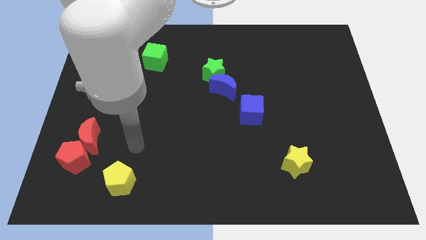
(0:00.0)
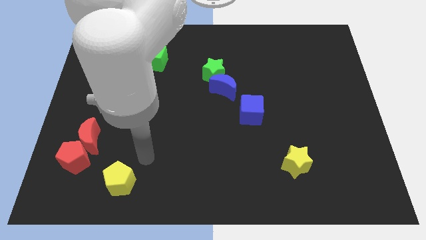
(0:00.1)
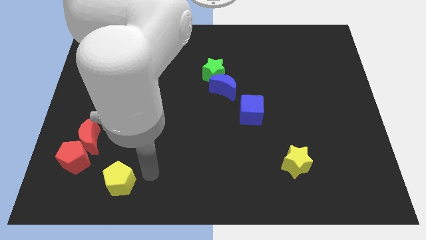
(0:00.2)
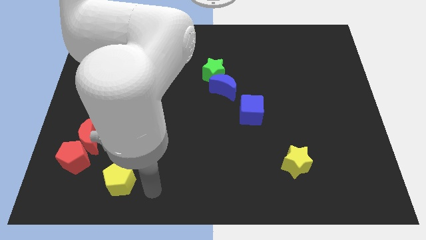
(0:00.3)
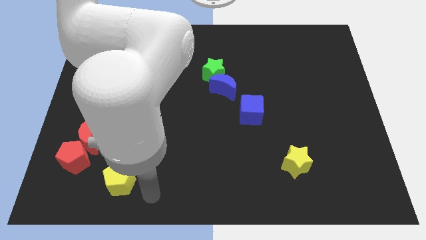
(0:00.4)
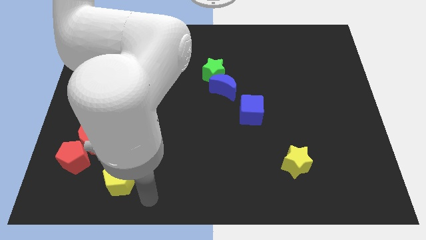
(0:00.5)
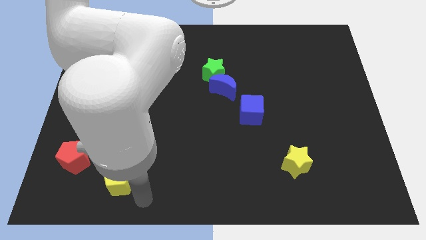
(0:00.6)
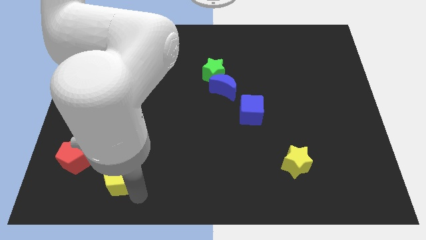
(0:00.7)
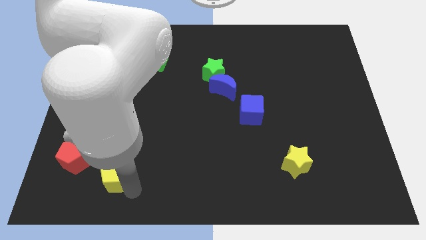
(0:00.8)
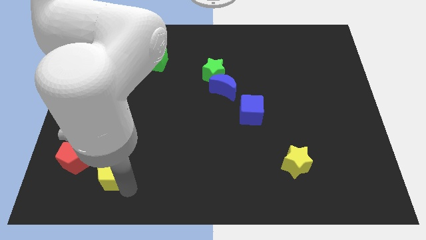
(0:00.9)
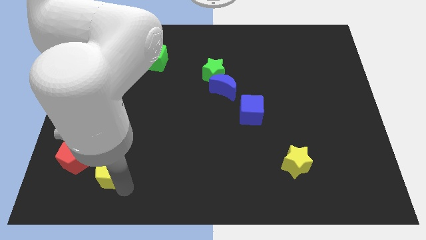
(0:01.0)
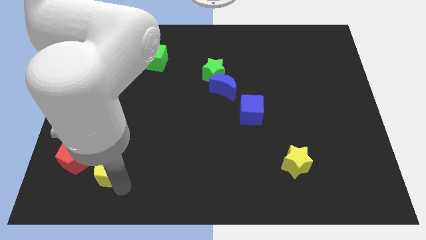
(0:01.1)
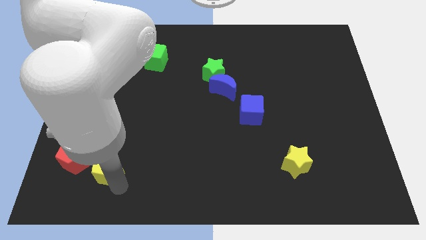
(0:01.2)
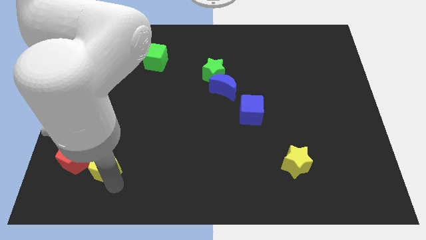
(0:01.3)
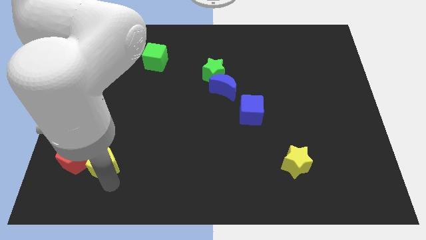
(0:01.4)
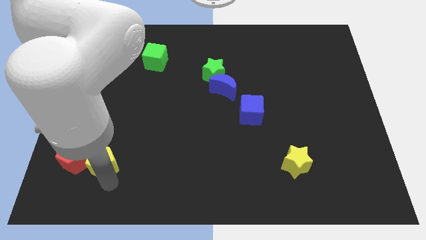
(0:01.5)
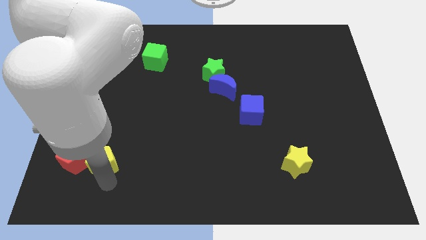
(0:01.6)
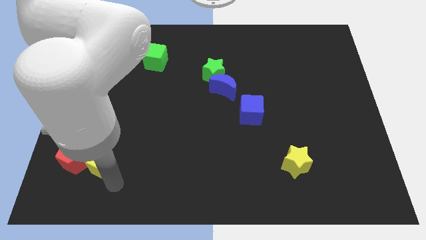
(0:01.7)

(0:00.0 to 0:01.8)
place the yellow pentagon right to the red pentagon

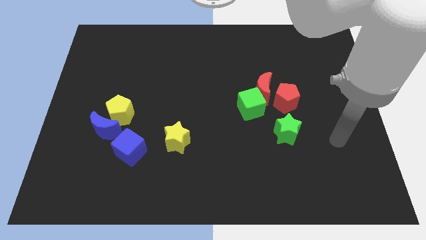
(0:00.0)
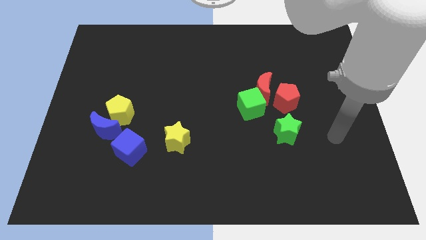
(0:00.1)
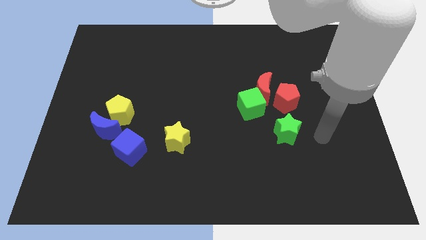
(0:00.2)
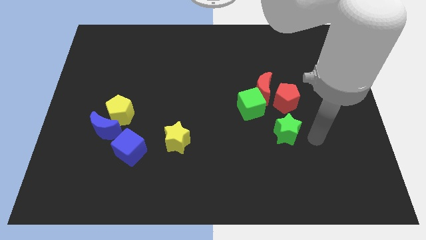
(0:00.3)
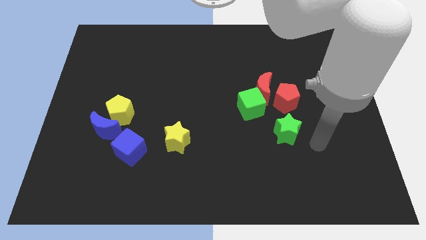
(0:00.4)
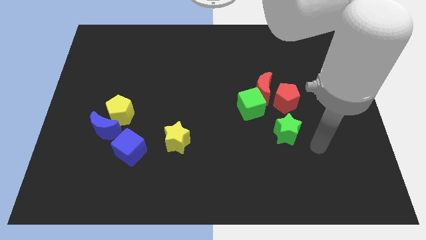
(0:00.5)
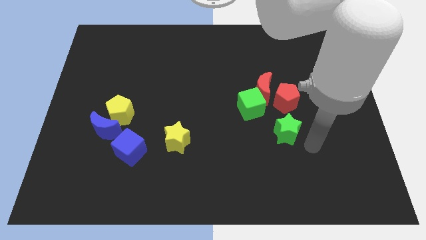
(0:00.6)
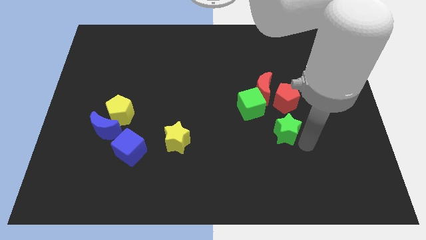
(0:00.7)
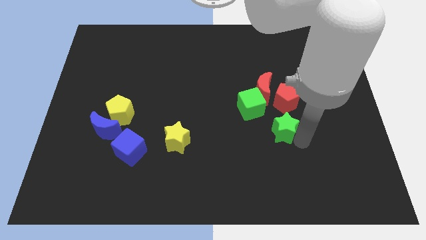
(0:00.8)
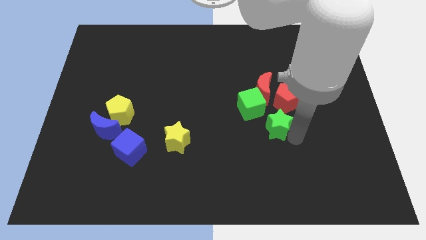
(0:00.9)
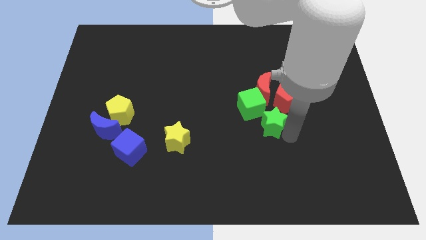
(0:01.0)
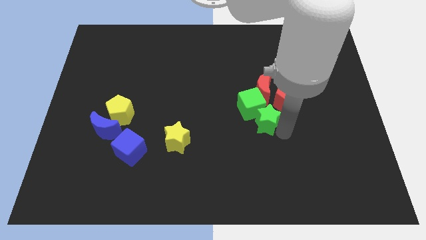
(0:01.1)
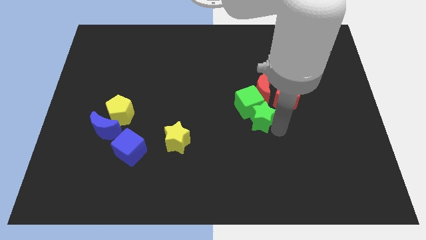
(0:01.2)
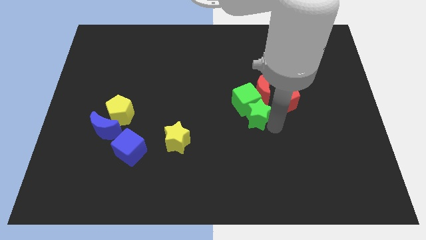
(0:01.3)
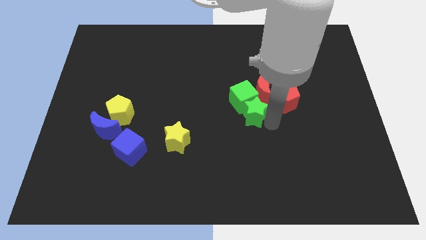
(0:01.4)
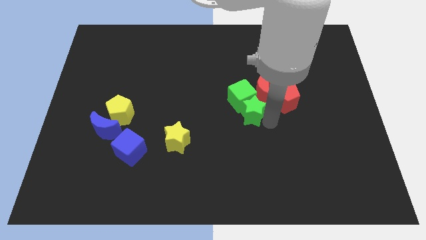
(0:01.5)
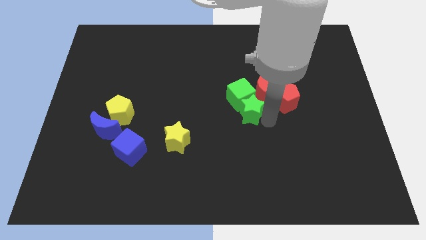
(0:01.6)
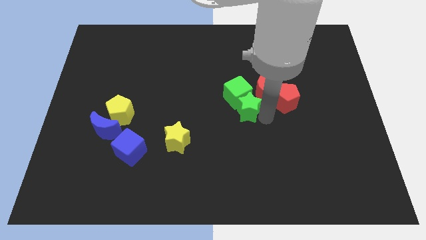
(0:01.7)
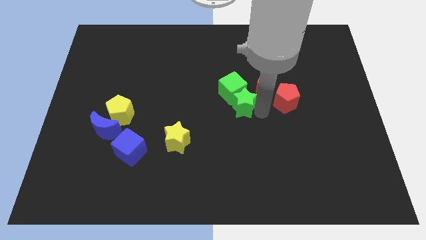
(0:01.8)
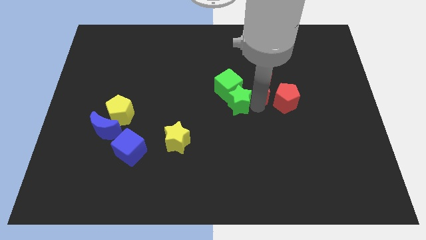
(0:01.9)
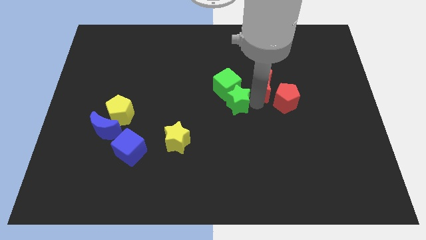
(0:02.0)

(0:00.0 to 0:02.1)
slightly move the green blocks upwards

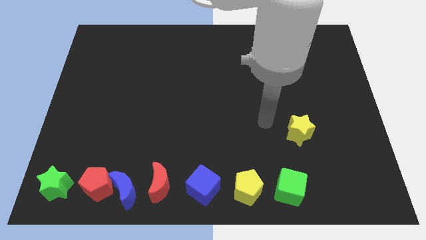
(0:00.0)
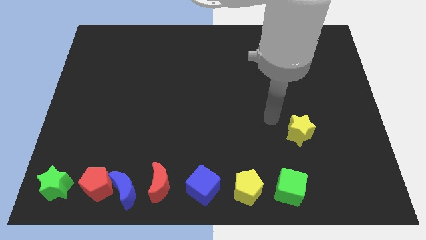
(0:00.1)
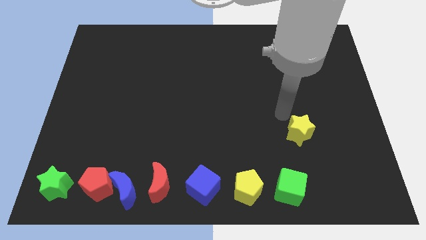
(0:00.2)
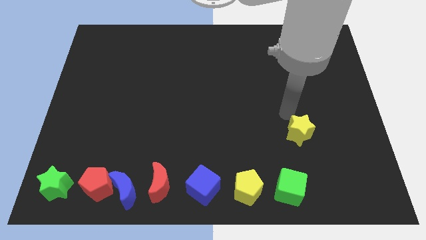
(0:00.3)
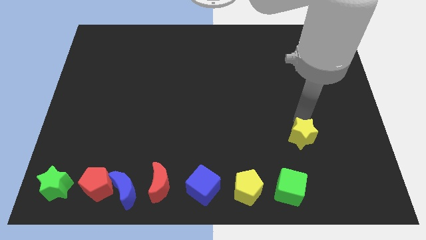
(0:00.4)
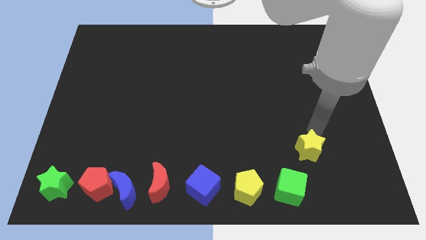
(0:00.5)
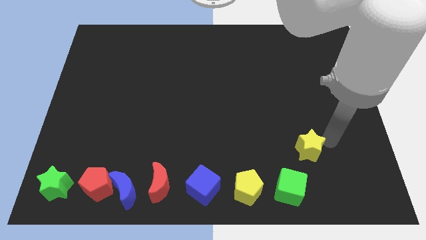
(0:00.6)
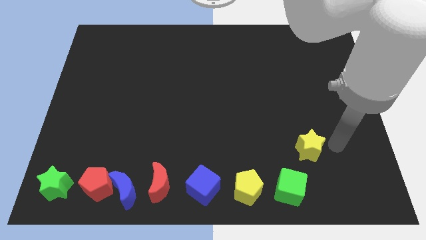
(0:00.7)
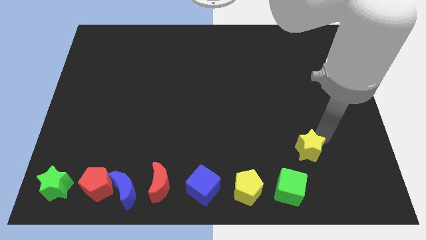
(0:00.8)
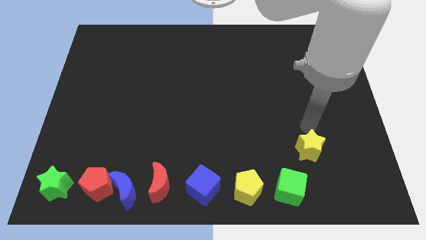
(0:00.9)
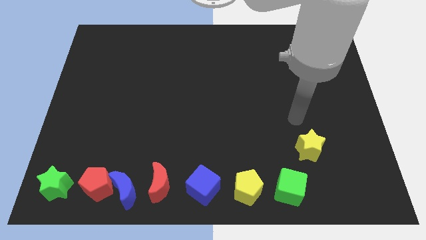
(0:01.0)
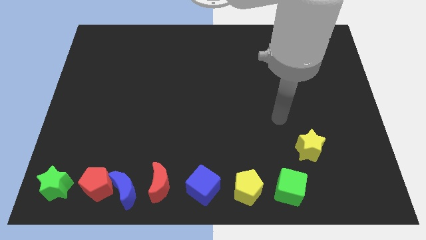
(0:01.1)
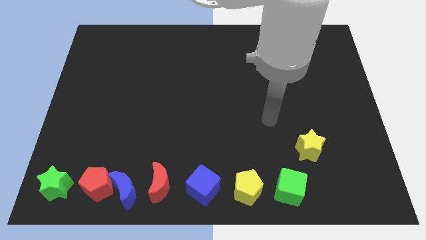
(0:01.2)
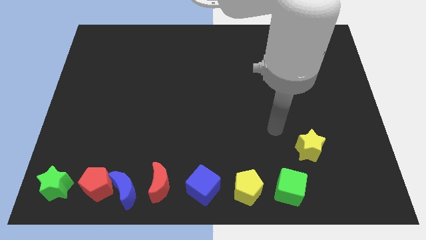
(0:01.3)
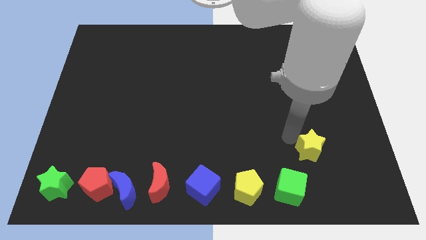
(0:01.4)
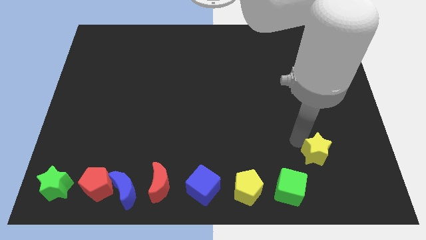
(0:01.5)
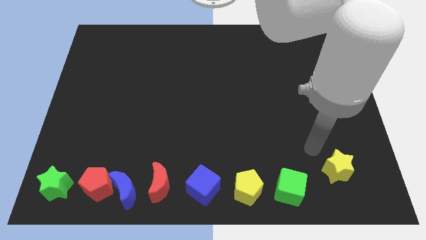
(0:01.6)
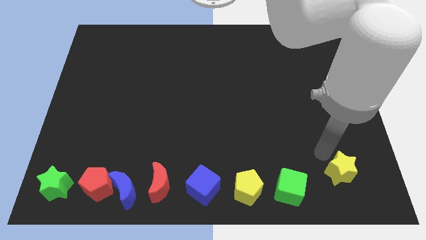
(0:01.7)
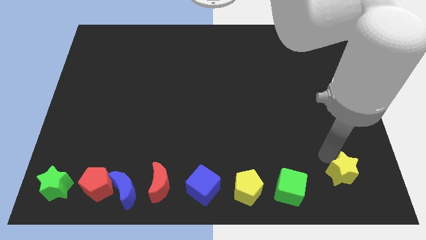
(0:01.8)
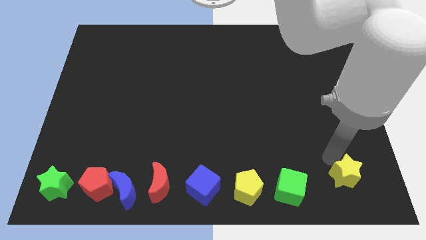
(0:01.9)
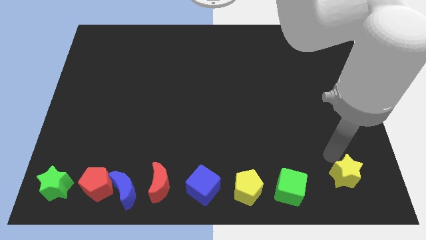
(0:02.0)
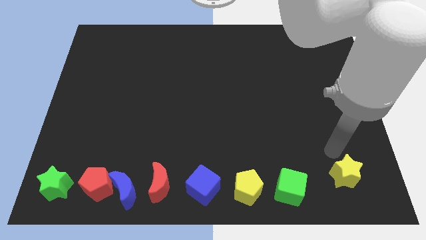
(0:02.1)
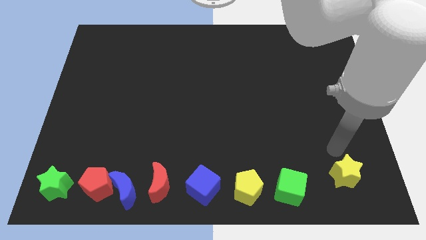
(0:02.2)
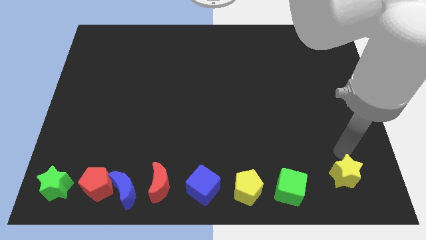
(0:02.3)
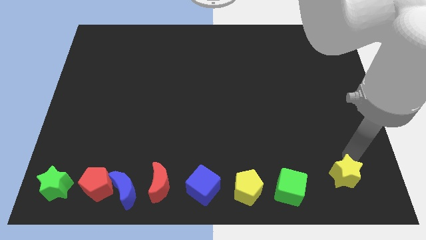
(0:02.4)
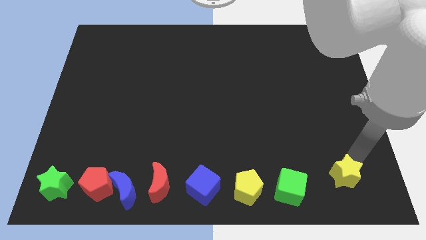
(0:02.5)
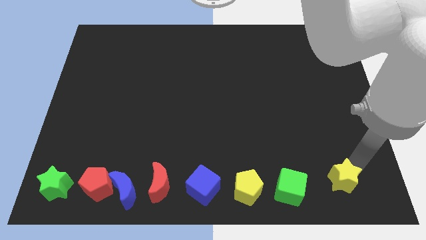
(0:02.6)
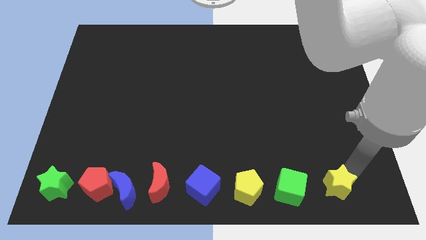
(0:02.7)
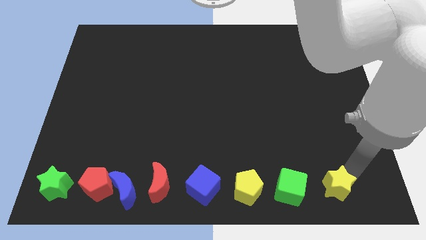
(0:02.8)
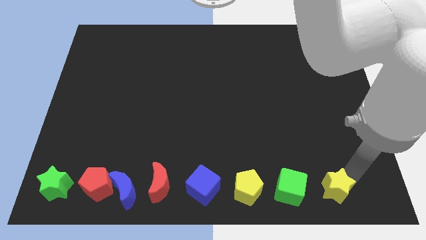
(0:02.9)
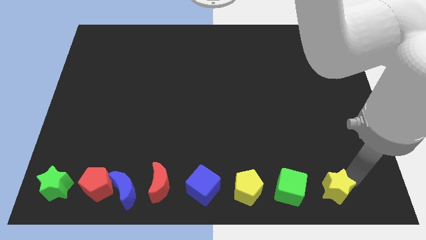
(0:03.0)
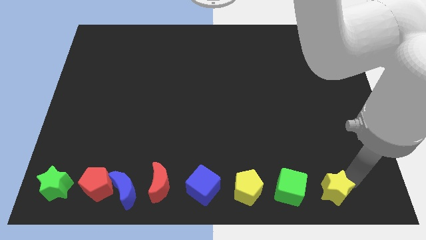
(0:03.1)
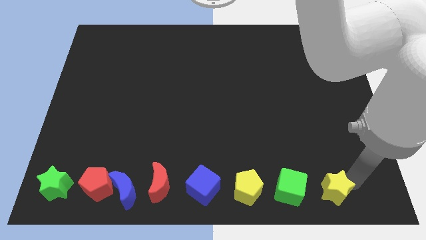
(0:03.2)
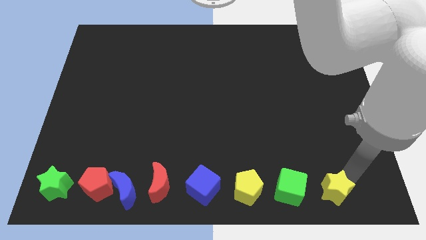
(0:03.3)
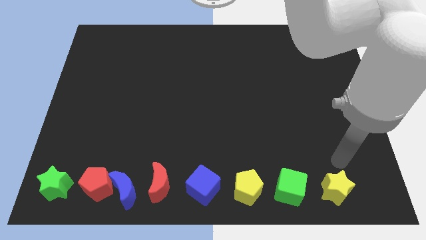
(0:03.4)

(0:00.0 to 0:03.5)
move the yellow star right to the green cube

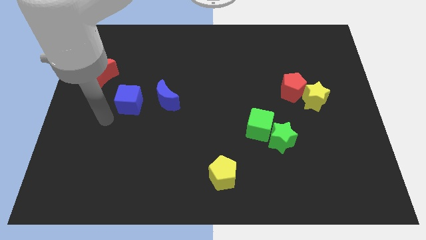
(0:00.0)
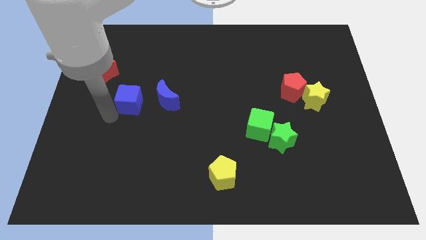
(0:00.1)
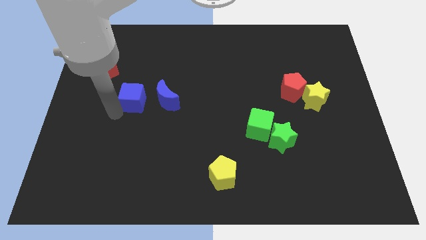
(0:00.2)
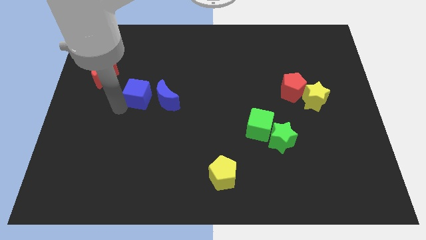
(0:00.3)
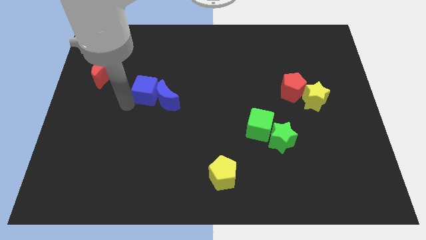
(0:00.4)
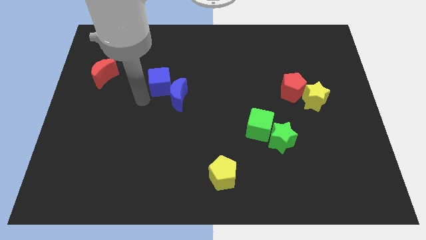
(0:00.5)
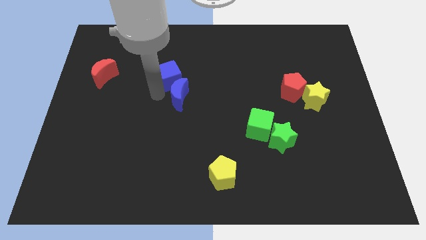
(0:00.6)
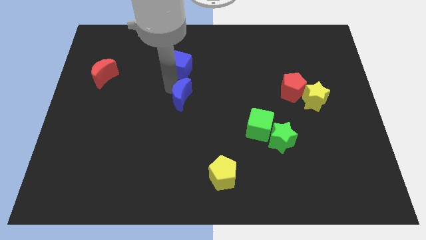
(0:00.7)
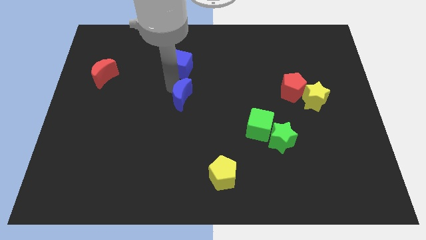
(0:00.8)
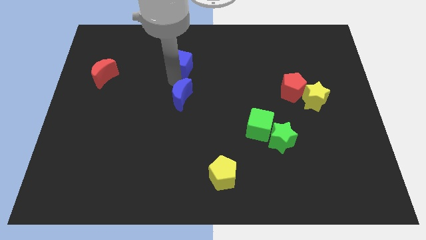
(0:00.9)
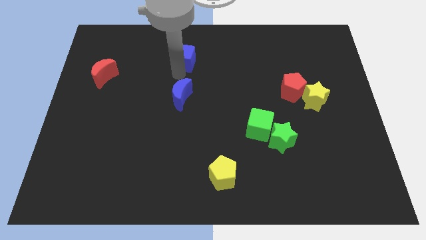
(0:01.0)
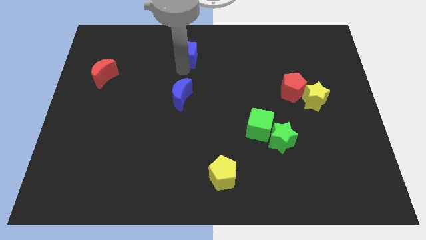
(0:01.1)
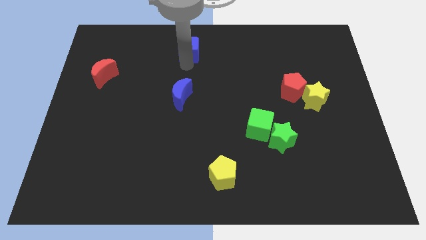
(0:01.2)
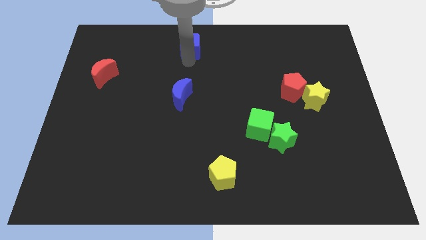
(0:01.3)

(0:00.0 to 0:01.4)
place the blue cube above the blue moon

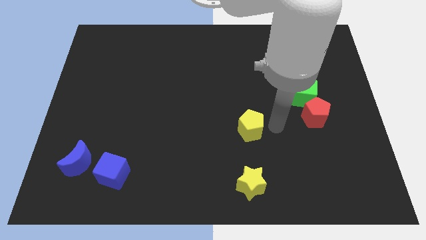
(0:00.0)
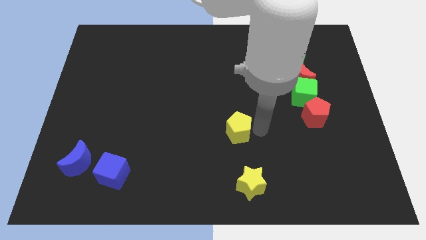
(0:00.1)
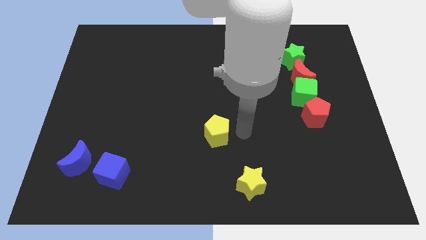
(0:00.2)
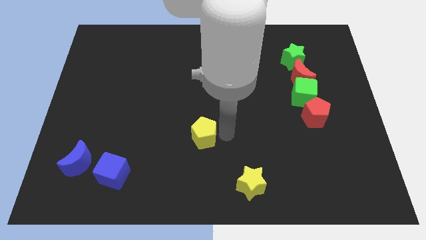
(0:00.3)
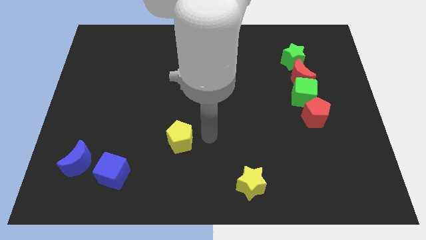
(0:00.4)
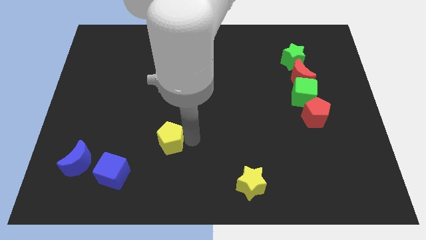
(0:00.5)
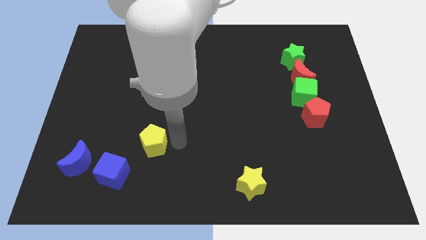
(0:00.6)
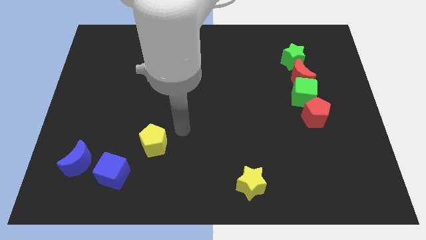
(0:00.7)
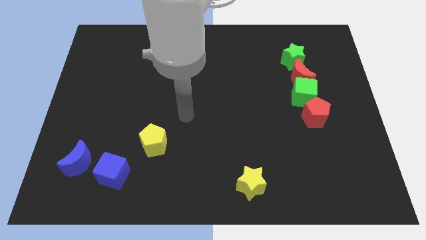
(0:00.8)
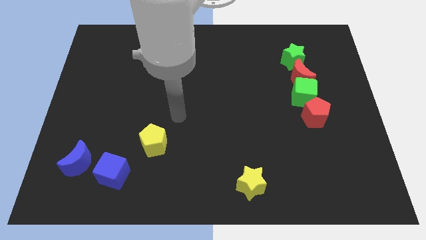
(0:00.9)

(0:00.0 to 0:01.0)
push the yellow pentagon diagonally top right to the blue cube
